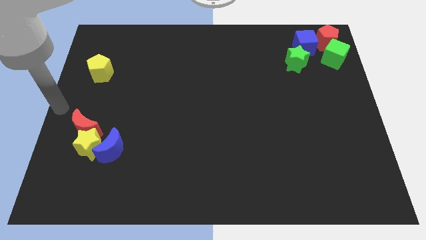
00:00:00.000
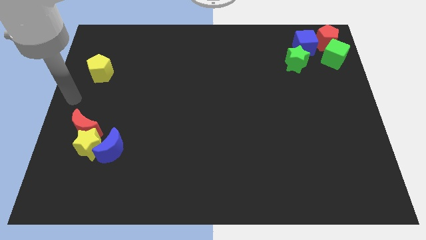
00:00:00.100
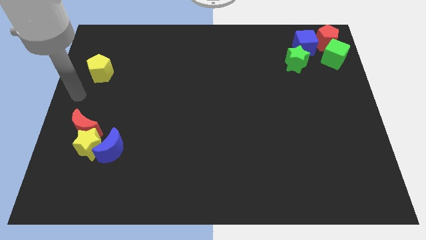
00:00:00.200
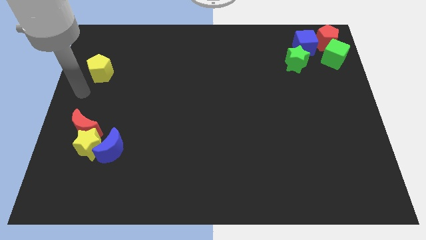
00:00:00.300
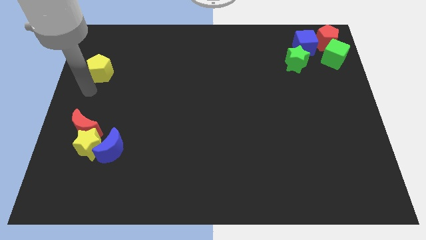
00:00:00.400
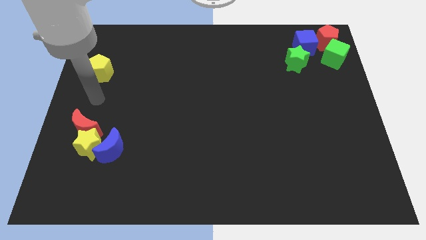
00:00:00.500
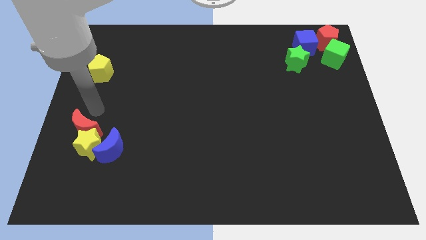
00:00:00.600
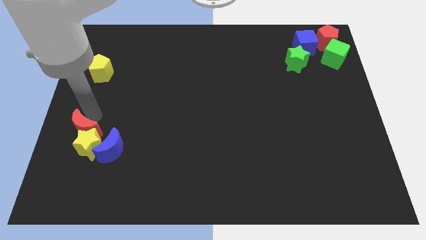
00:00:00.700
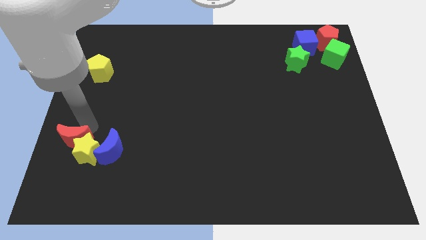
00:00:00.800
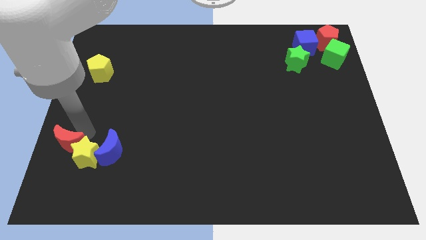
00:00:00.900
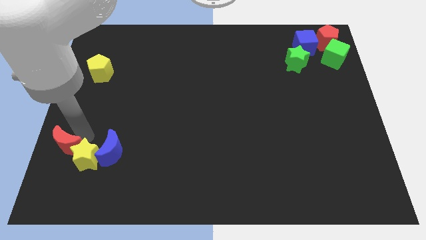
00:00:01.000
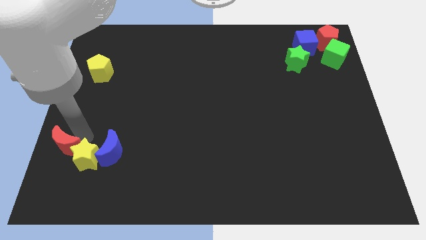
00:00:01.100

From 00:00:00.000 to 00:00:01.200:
push red moon slightly towards its bottom

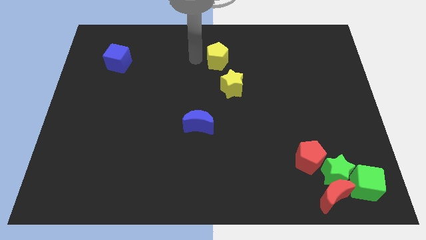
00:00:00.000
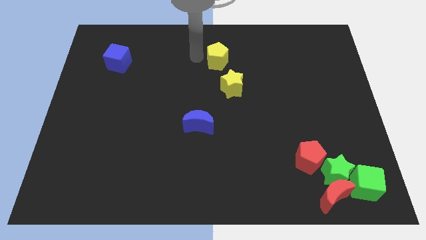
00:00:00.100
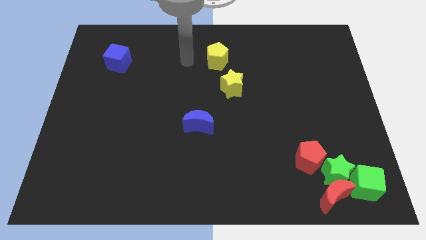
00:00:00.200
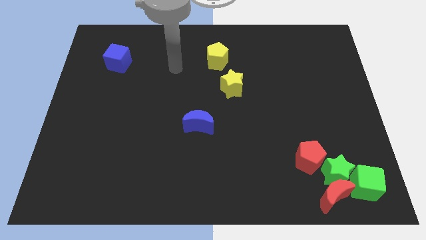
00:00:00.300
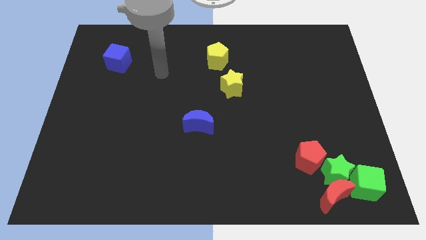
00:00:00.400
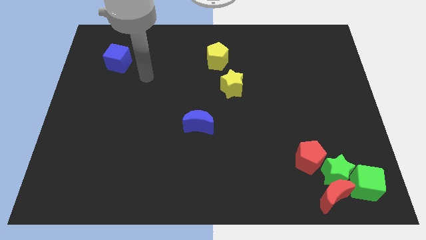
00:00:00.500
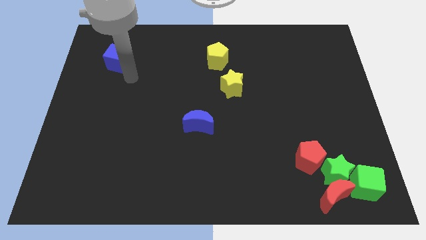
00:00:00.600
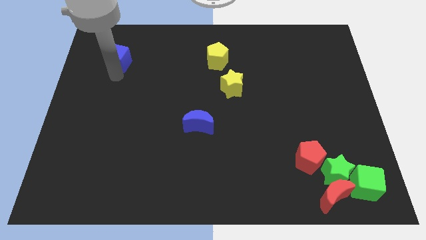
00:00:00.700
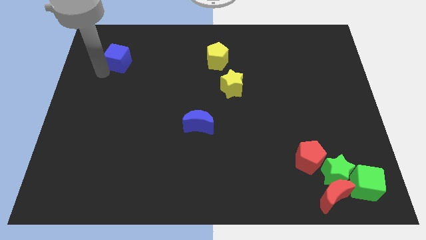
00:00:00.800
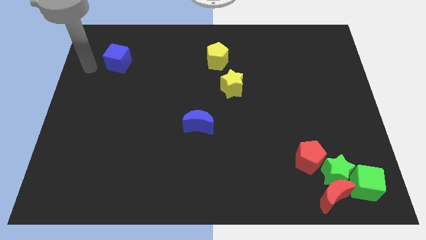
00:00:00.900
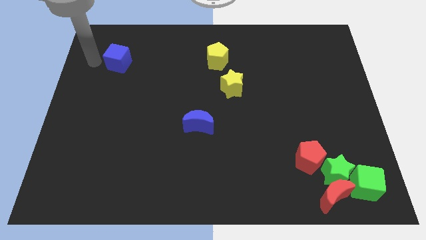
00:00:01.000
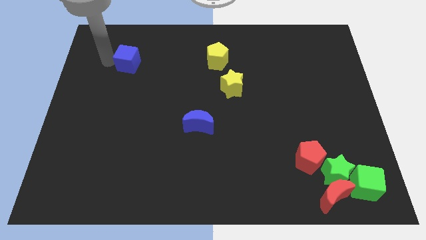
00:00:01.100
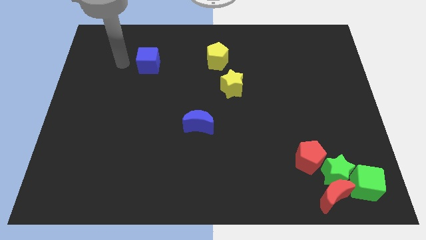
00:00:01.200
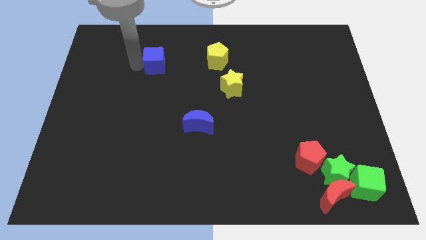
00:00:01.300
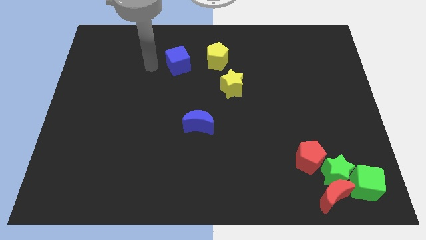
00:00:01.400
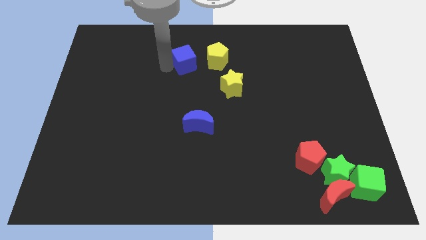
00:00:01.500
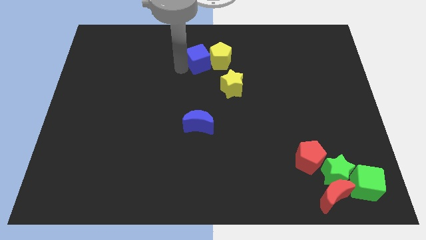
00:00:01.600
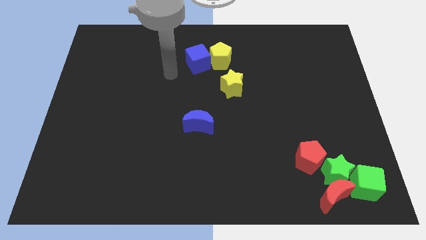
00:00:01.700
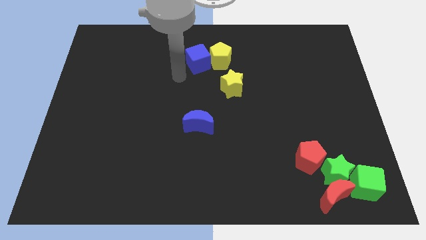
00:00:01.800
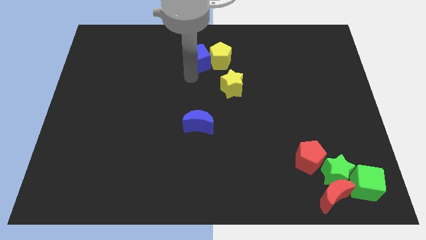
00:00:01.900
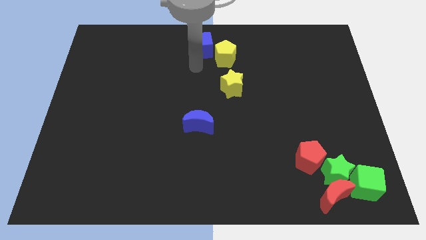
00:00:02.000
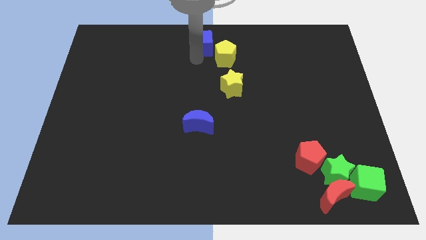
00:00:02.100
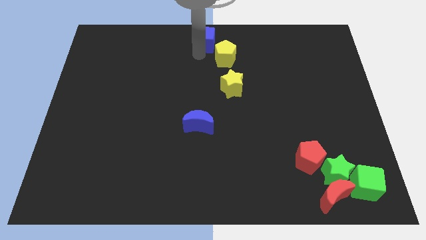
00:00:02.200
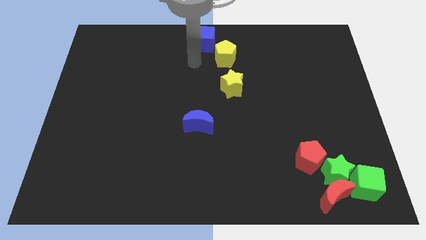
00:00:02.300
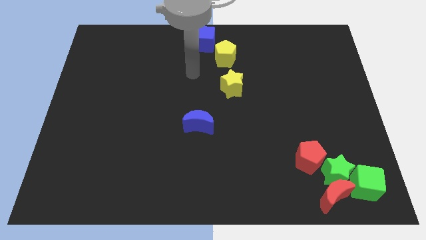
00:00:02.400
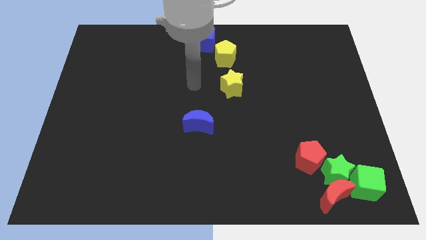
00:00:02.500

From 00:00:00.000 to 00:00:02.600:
move blue cube to the top center

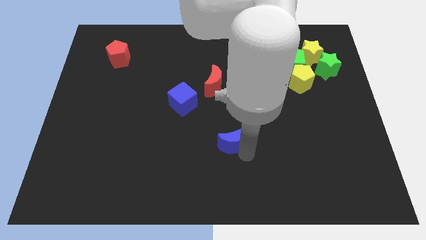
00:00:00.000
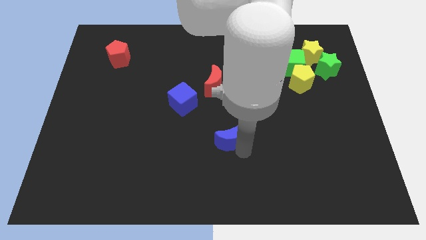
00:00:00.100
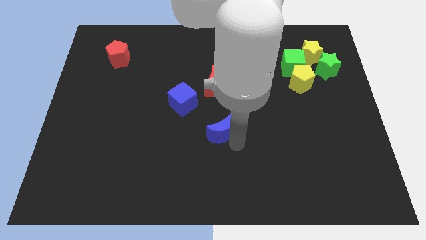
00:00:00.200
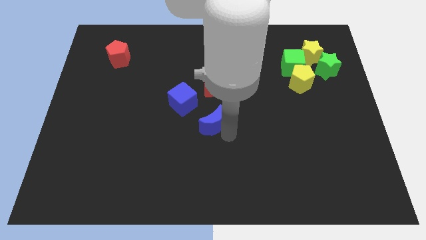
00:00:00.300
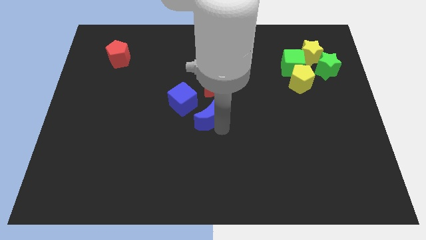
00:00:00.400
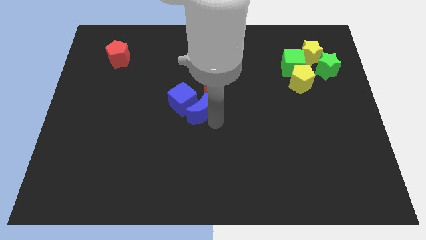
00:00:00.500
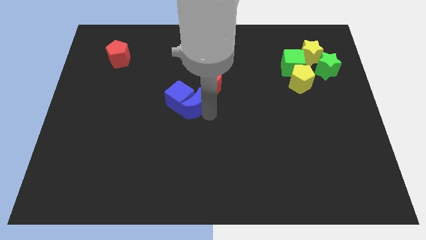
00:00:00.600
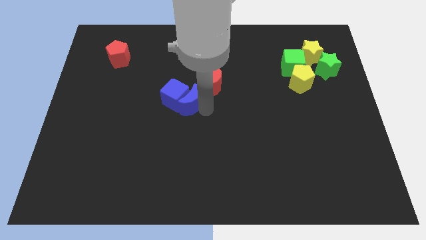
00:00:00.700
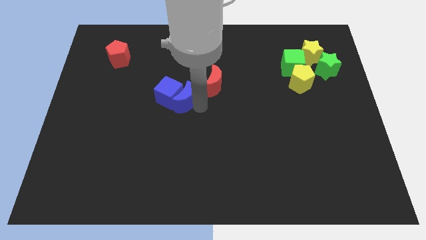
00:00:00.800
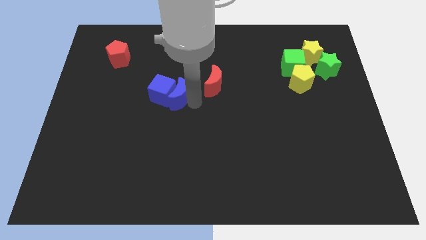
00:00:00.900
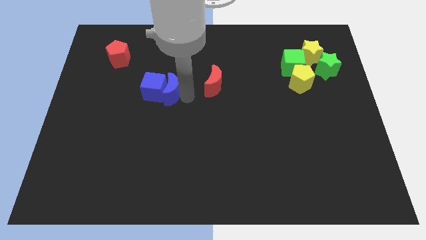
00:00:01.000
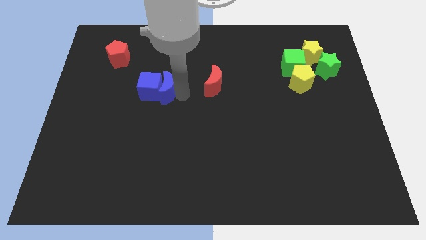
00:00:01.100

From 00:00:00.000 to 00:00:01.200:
push the blue crescent into the right of the blue cube

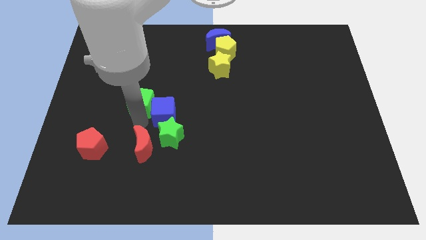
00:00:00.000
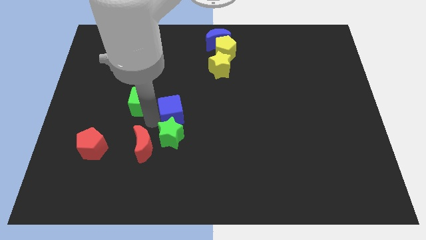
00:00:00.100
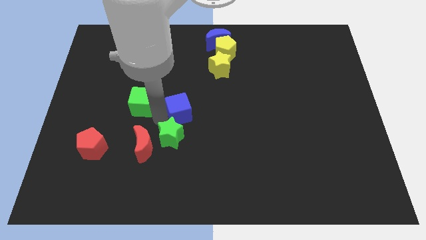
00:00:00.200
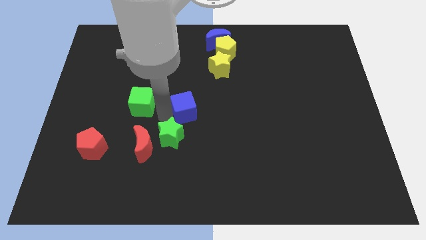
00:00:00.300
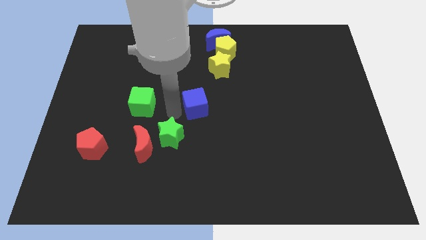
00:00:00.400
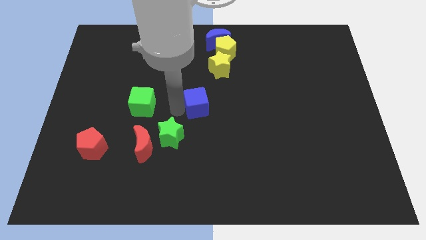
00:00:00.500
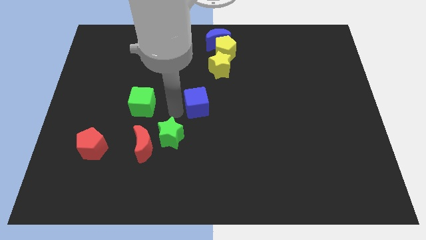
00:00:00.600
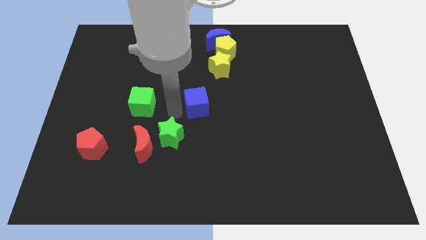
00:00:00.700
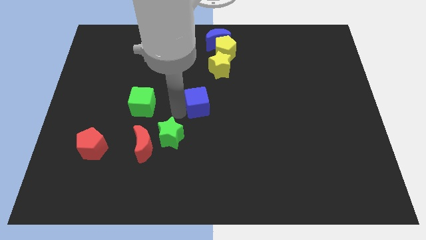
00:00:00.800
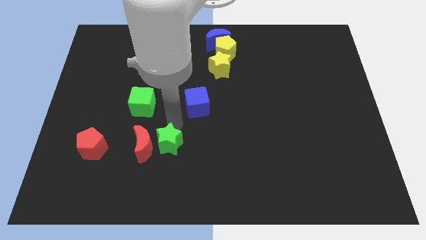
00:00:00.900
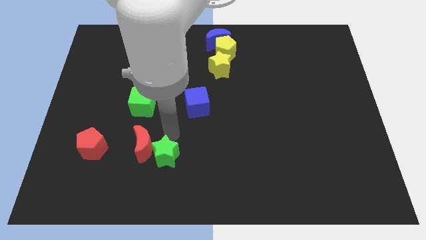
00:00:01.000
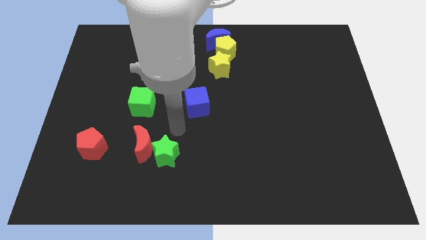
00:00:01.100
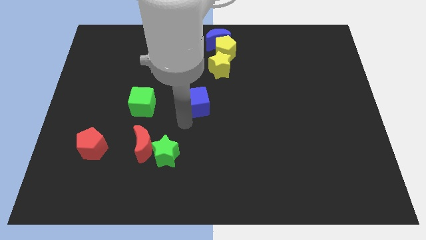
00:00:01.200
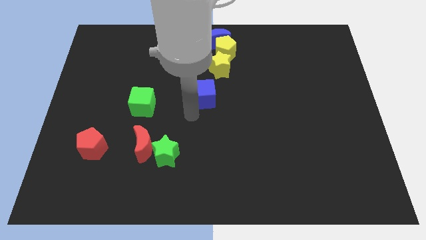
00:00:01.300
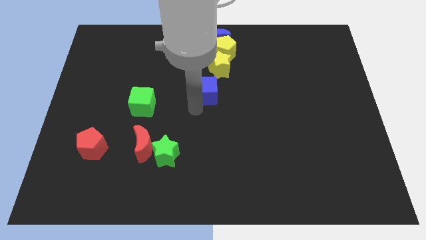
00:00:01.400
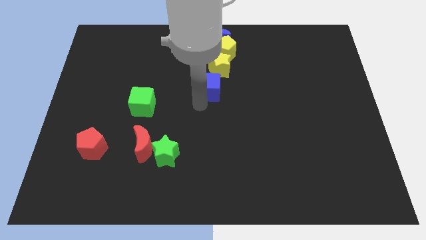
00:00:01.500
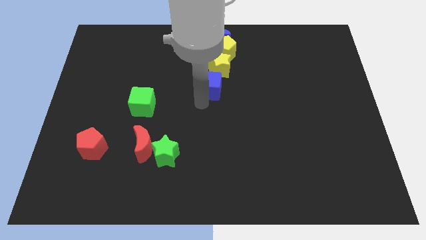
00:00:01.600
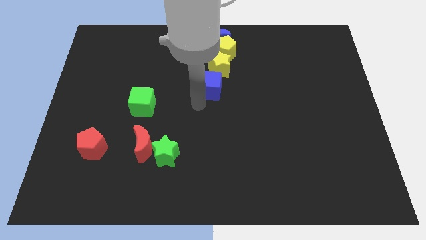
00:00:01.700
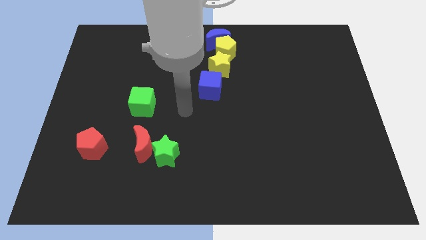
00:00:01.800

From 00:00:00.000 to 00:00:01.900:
move the blue cube to the bottom side of the yellow star

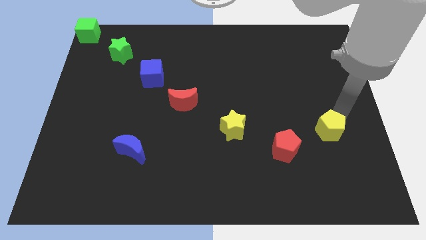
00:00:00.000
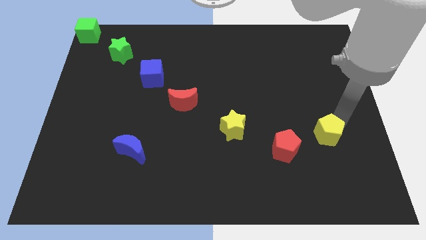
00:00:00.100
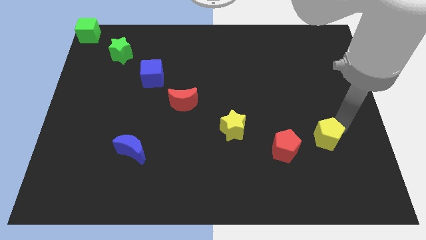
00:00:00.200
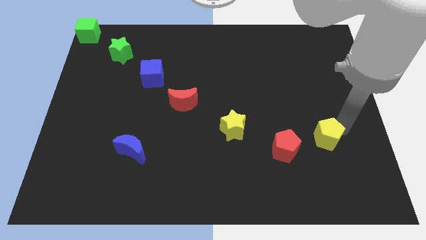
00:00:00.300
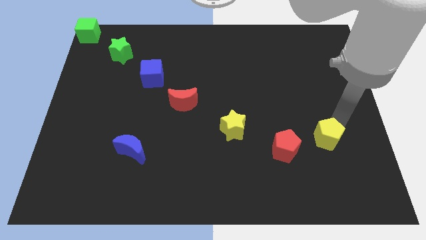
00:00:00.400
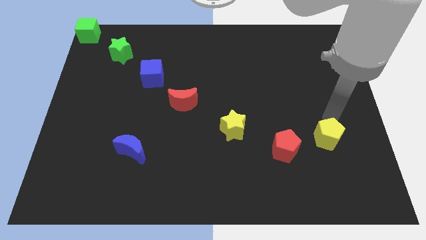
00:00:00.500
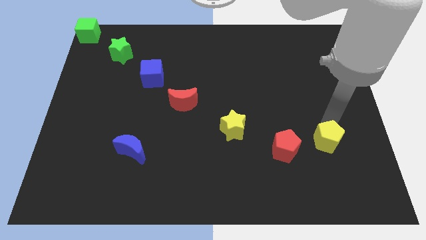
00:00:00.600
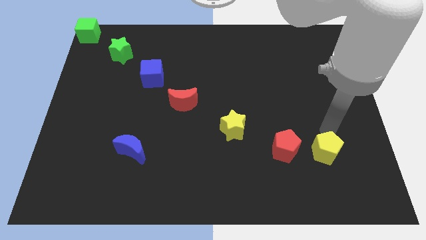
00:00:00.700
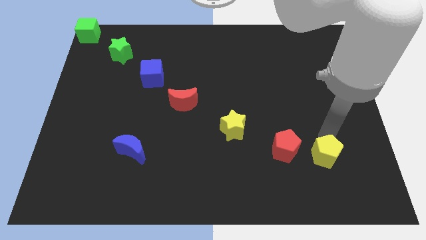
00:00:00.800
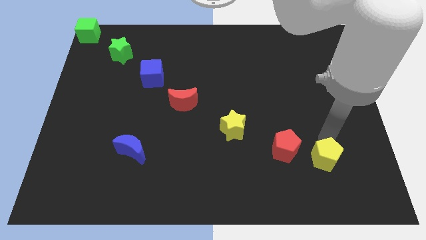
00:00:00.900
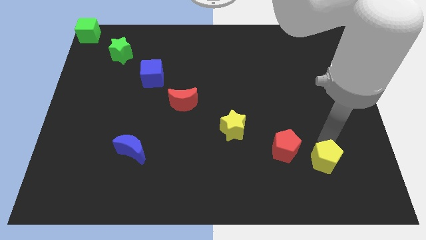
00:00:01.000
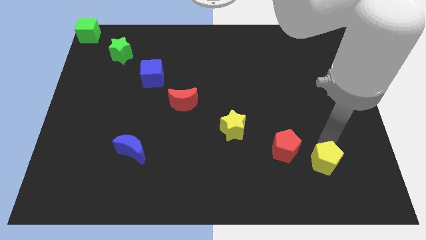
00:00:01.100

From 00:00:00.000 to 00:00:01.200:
place the yellow pentagon right to the red pentagon

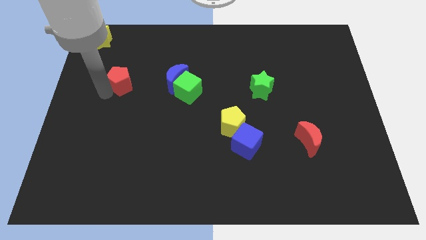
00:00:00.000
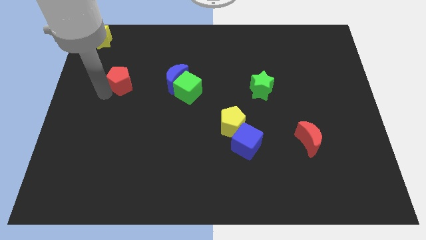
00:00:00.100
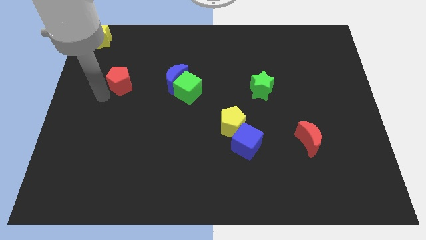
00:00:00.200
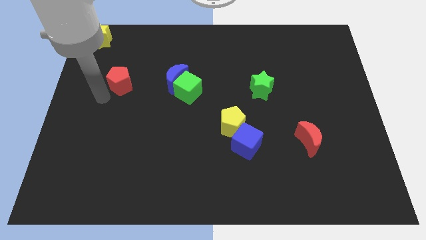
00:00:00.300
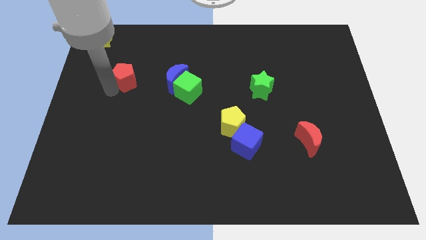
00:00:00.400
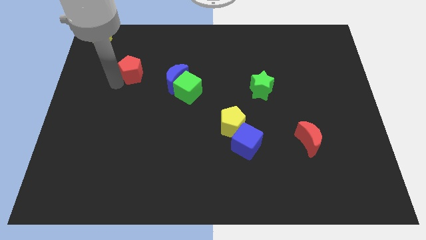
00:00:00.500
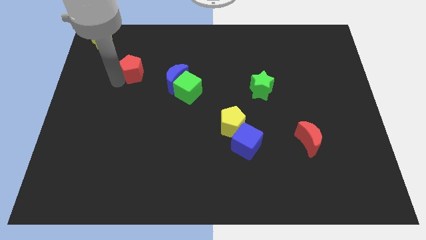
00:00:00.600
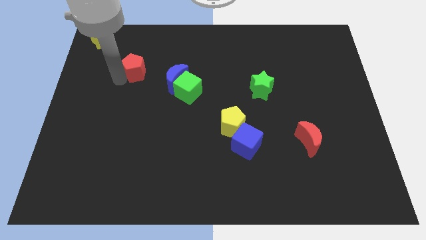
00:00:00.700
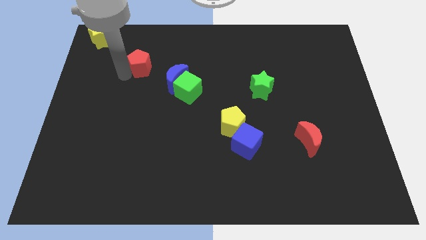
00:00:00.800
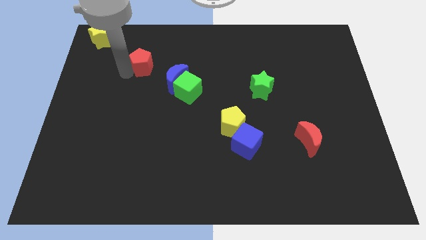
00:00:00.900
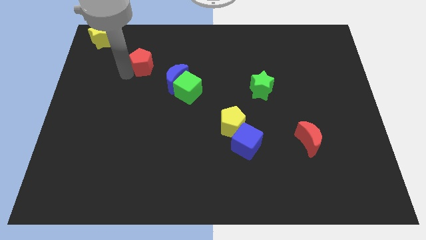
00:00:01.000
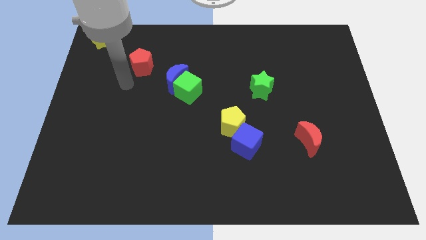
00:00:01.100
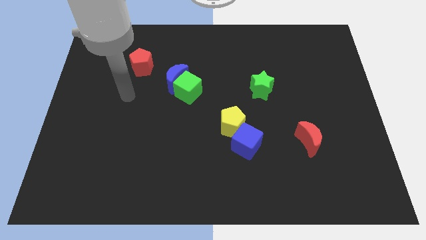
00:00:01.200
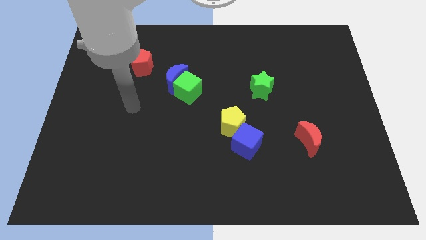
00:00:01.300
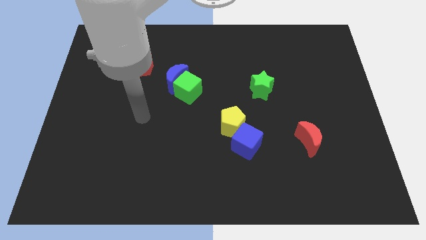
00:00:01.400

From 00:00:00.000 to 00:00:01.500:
place the red penatgon diagonally to the blue moon
